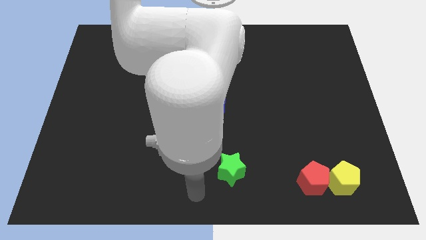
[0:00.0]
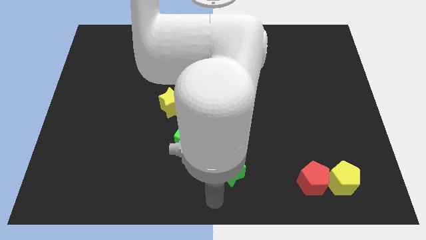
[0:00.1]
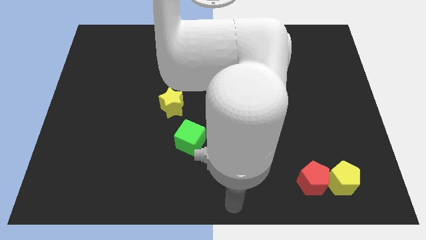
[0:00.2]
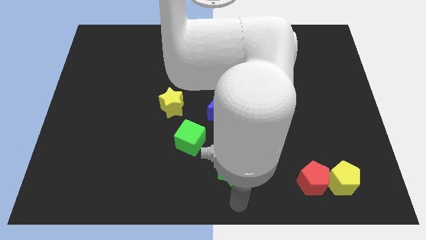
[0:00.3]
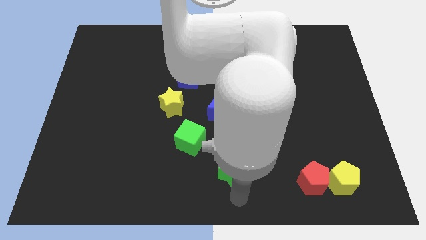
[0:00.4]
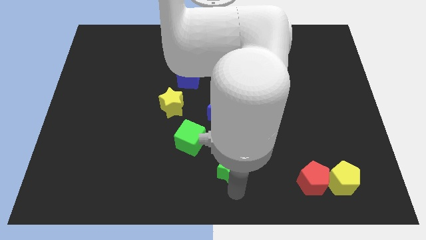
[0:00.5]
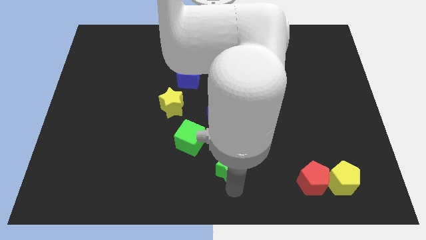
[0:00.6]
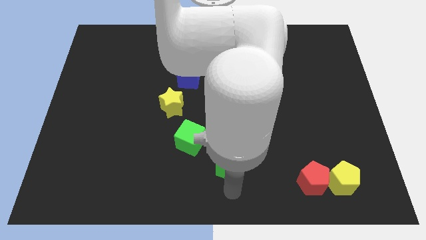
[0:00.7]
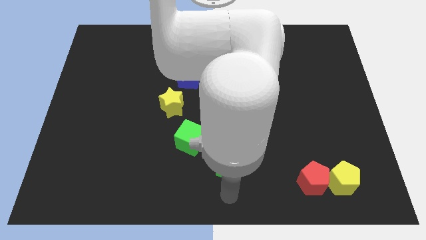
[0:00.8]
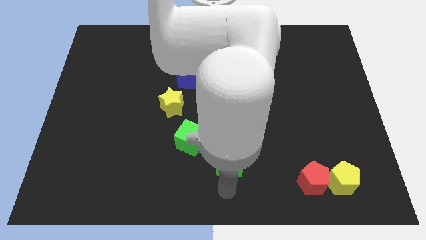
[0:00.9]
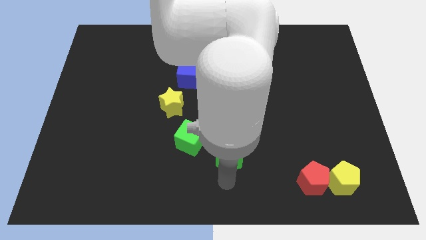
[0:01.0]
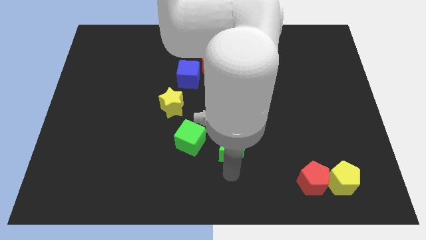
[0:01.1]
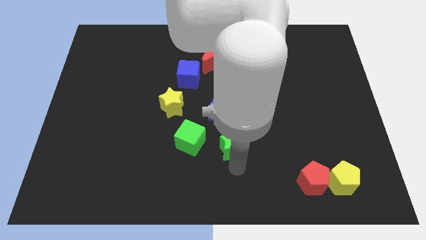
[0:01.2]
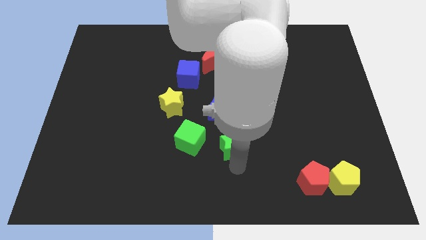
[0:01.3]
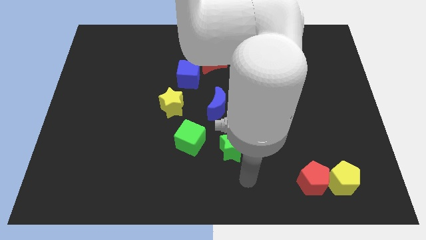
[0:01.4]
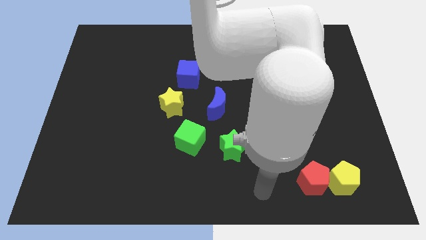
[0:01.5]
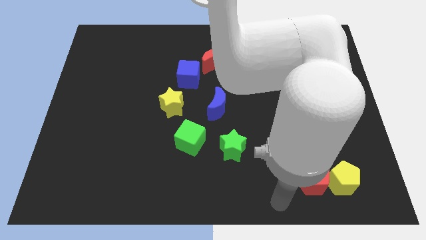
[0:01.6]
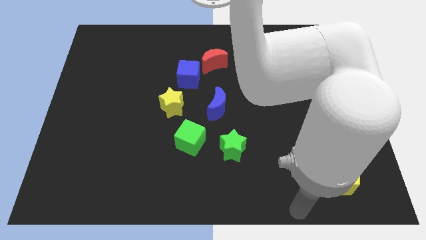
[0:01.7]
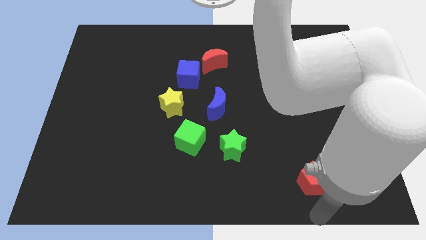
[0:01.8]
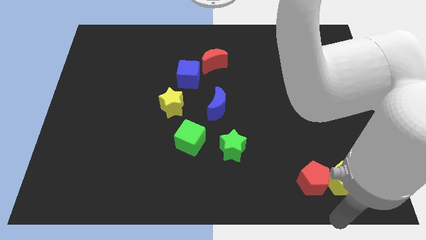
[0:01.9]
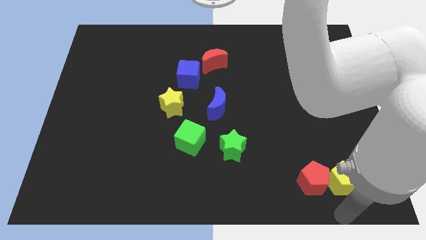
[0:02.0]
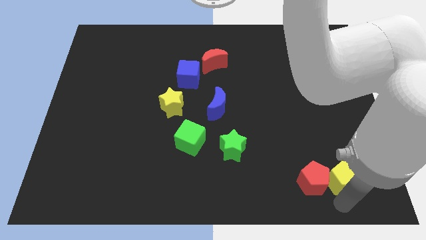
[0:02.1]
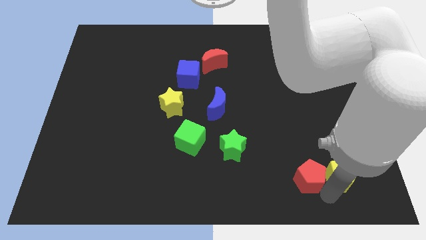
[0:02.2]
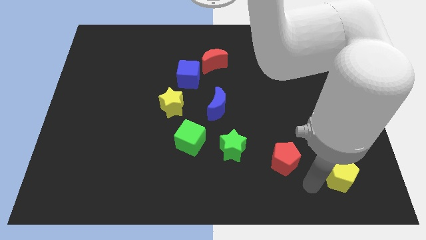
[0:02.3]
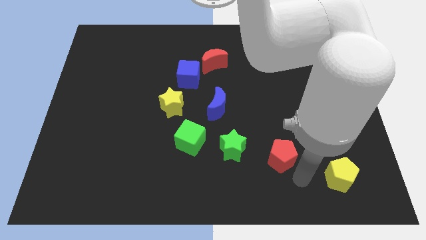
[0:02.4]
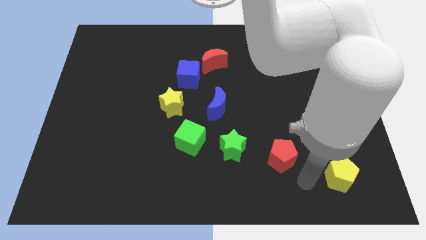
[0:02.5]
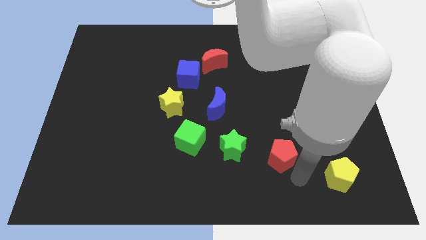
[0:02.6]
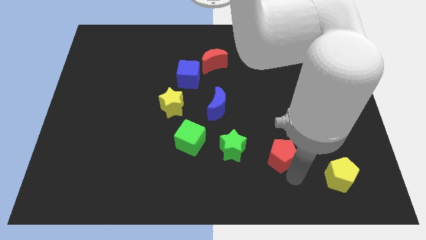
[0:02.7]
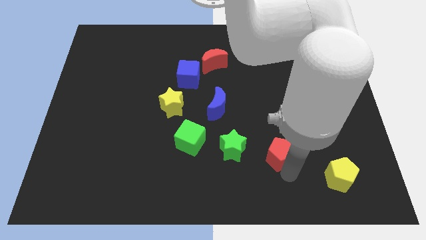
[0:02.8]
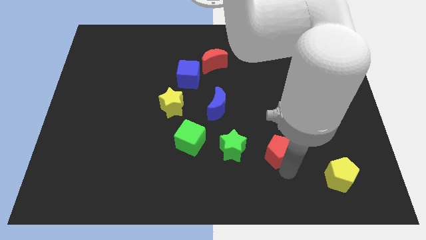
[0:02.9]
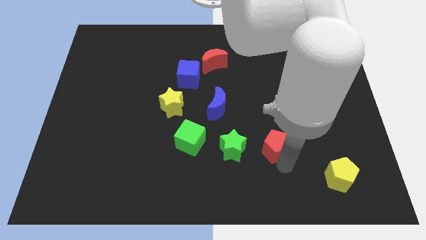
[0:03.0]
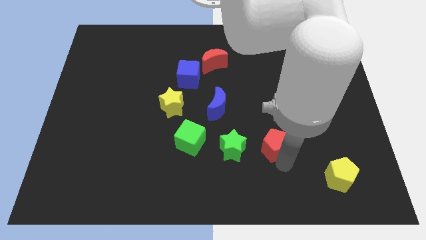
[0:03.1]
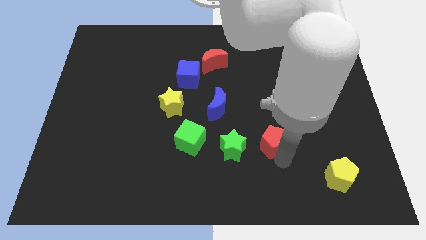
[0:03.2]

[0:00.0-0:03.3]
move the green star and red pentagon to the right side of the green cube

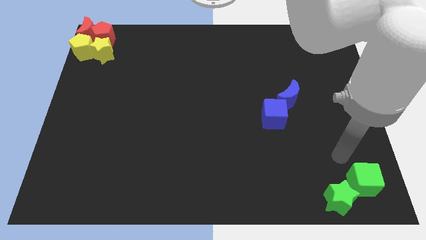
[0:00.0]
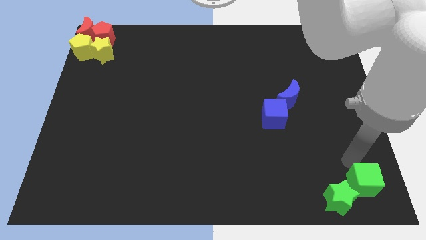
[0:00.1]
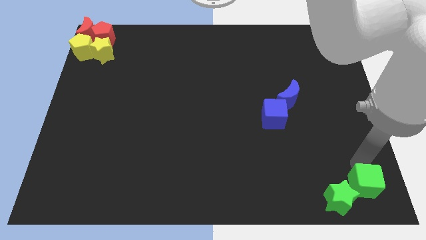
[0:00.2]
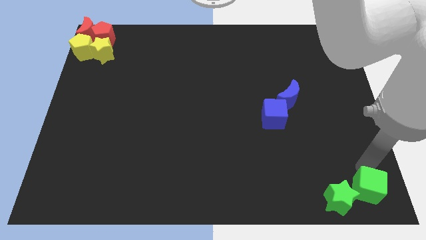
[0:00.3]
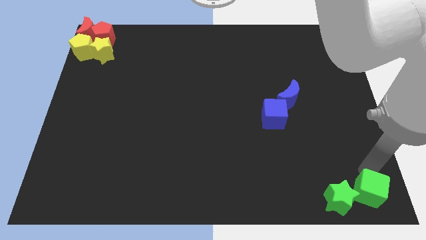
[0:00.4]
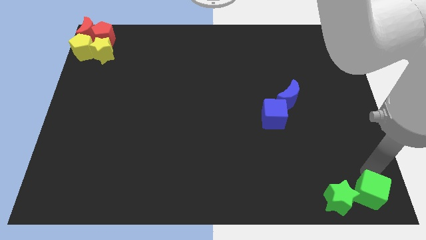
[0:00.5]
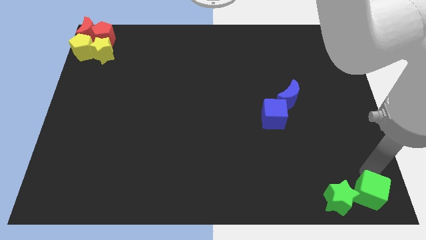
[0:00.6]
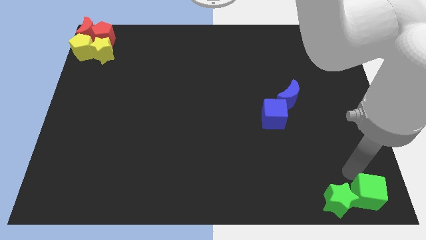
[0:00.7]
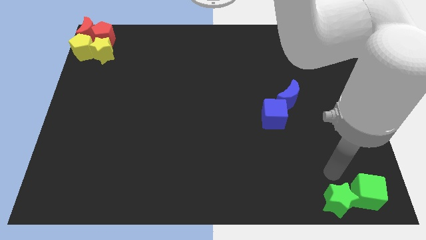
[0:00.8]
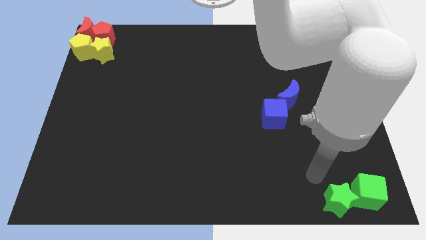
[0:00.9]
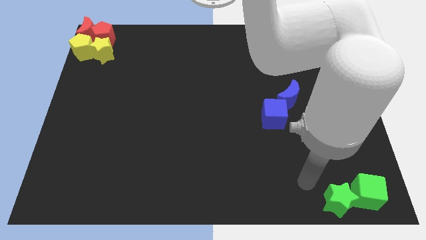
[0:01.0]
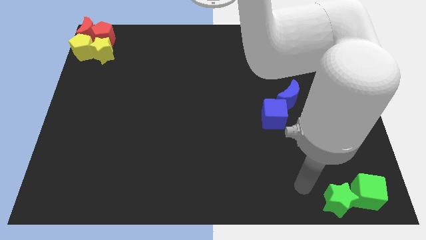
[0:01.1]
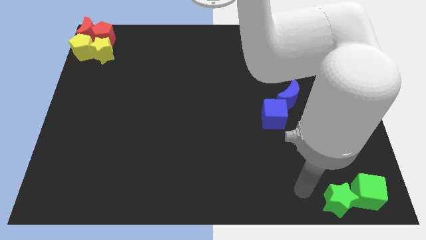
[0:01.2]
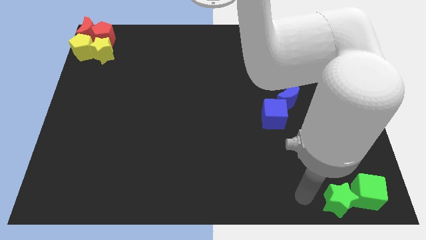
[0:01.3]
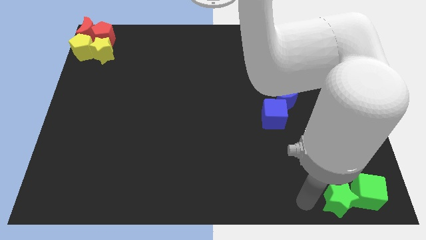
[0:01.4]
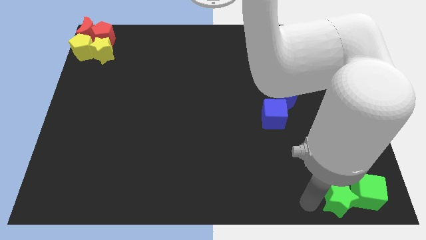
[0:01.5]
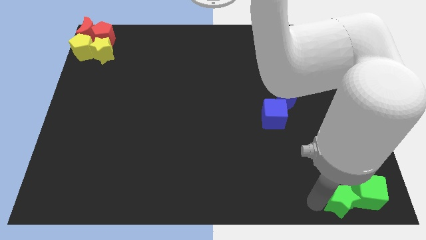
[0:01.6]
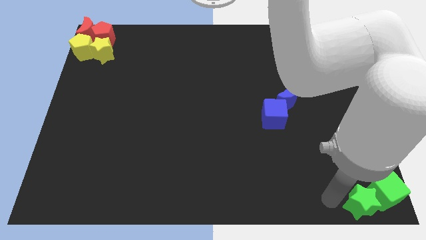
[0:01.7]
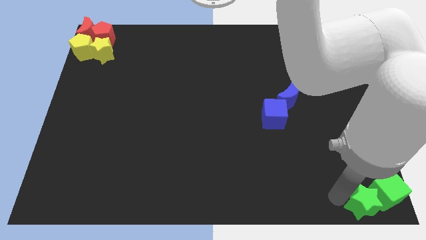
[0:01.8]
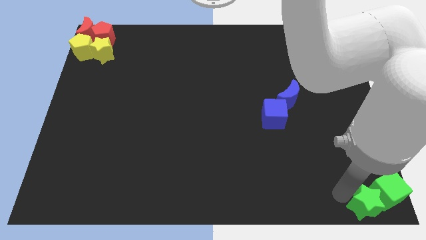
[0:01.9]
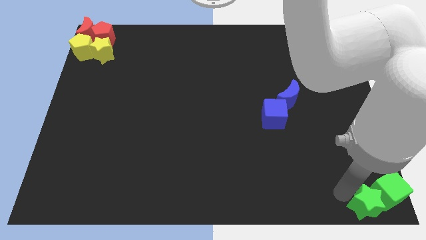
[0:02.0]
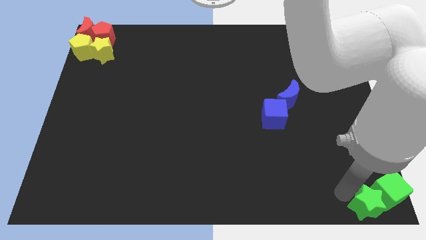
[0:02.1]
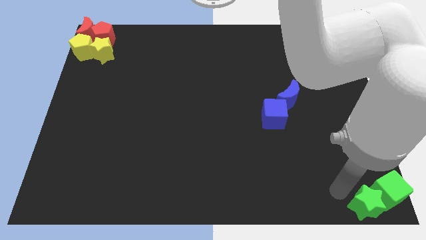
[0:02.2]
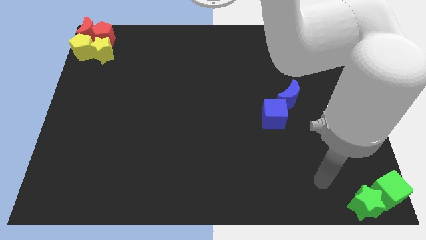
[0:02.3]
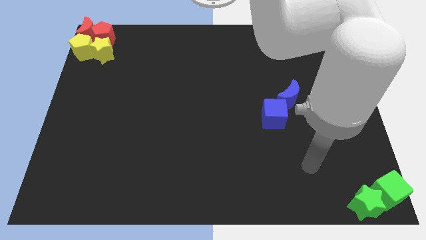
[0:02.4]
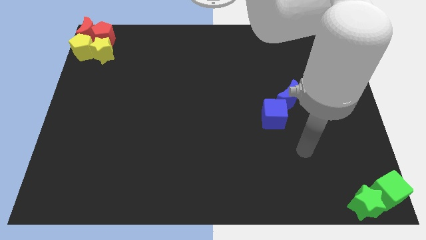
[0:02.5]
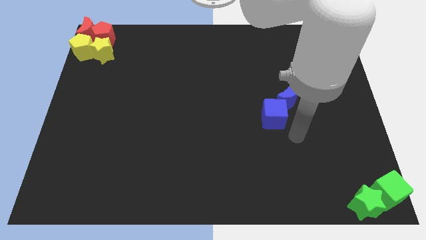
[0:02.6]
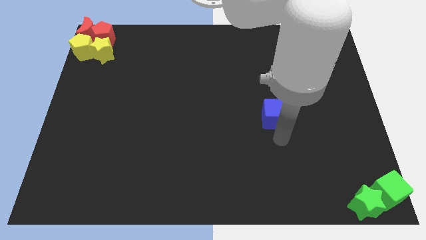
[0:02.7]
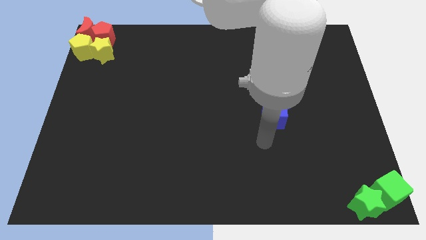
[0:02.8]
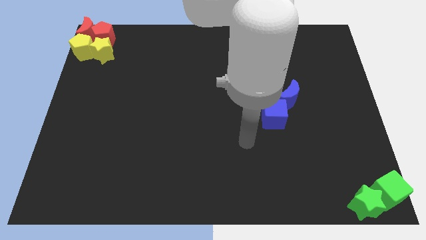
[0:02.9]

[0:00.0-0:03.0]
move the green blocks to the bottom right

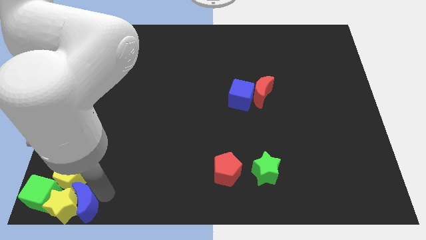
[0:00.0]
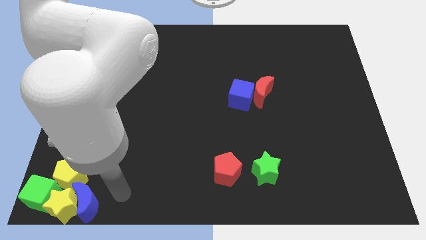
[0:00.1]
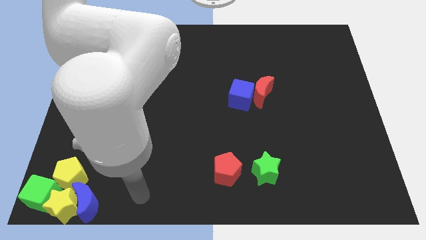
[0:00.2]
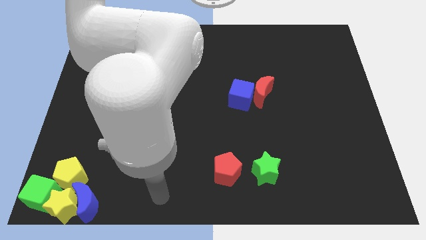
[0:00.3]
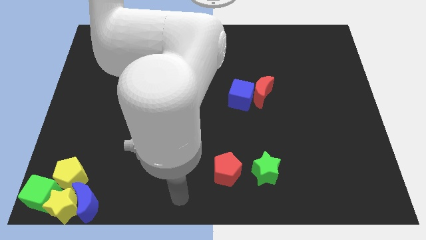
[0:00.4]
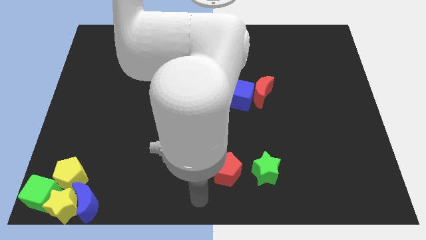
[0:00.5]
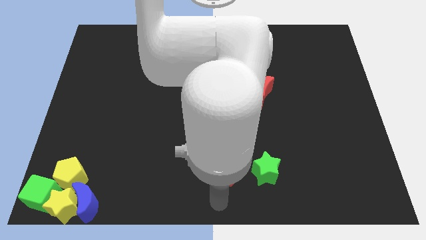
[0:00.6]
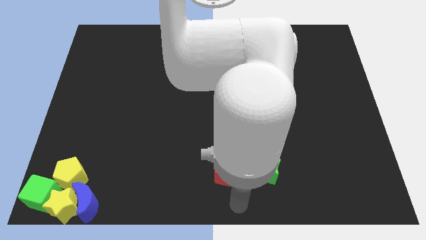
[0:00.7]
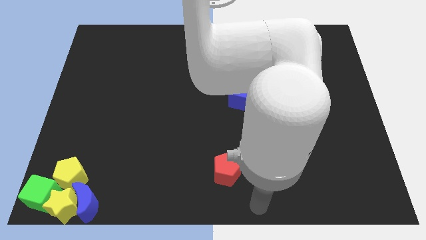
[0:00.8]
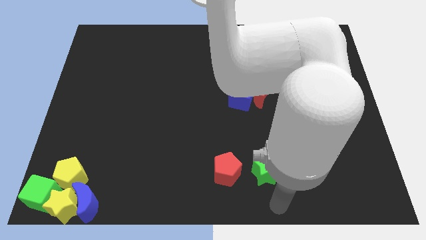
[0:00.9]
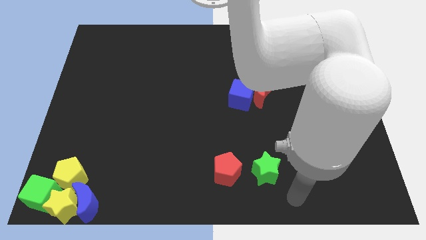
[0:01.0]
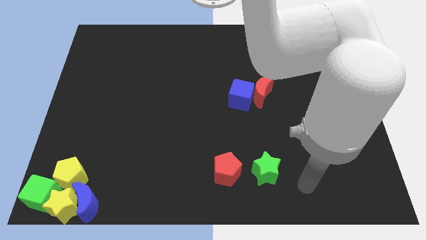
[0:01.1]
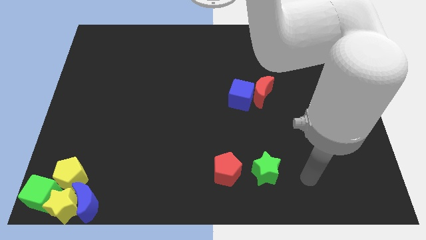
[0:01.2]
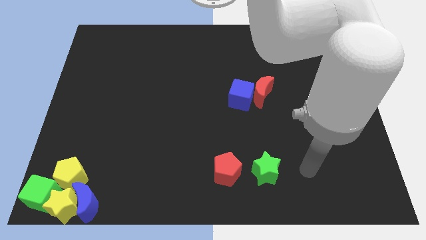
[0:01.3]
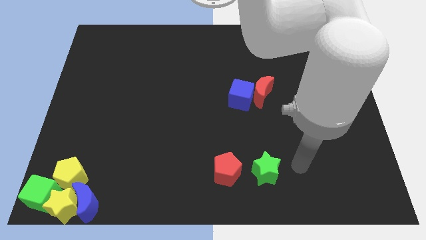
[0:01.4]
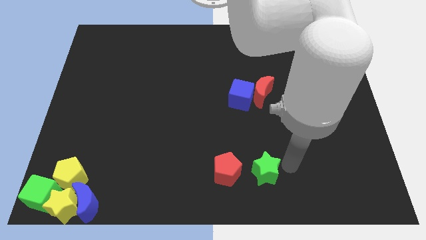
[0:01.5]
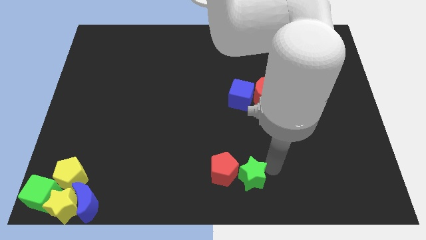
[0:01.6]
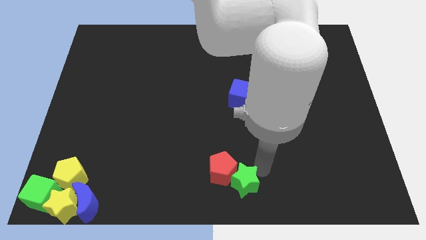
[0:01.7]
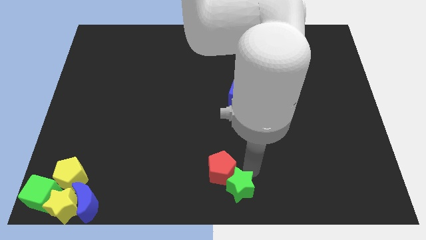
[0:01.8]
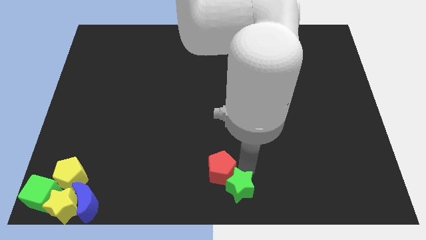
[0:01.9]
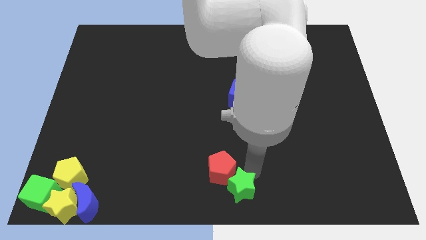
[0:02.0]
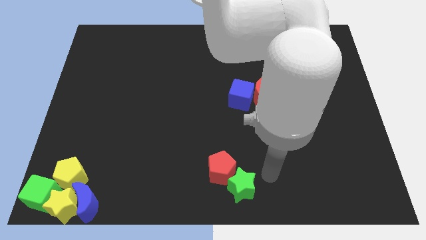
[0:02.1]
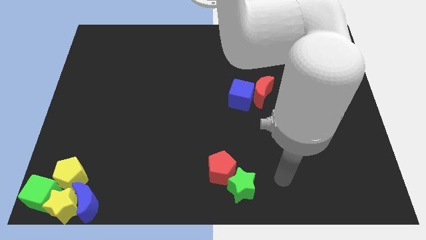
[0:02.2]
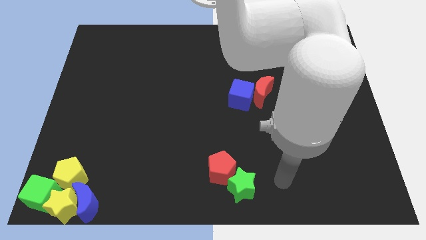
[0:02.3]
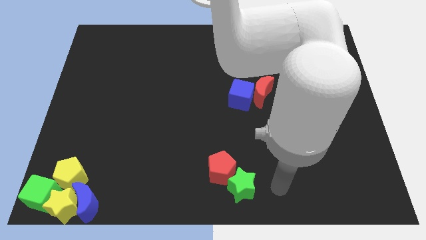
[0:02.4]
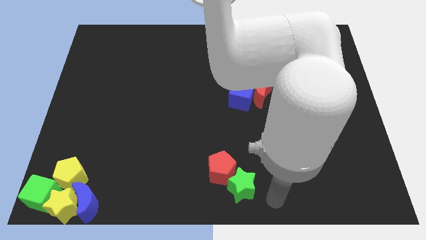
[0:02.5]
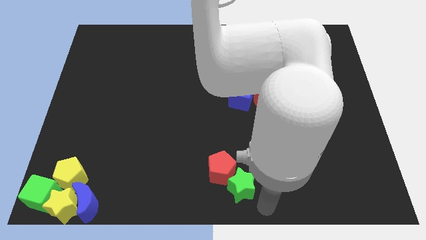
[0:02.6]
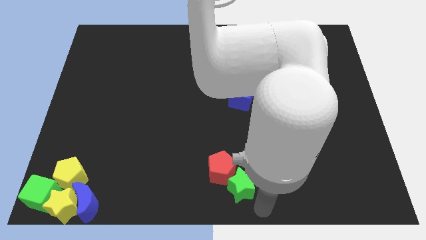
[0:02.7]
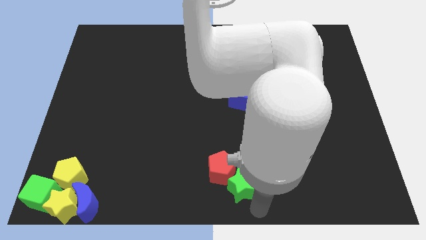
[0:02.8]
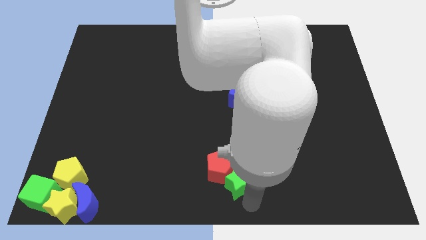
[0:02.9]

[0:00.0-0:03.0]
push the green star into the red pentagon
